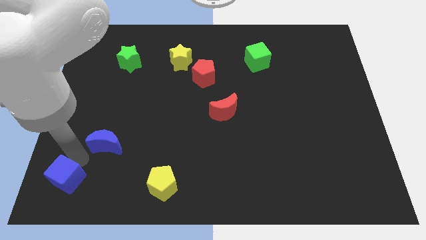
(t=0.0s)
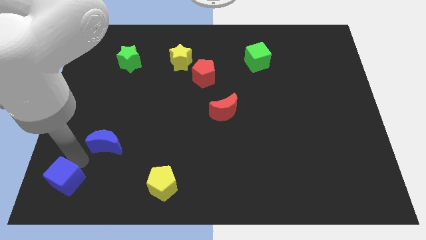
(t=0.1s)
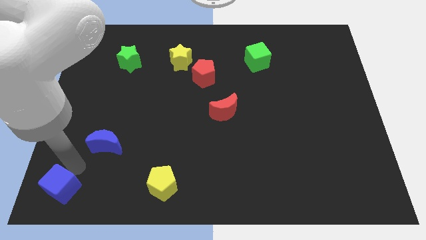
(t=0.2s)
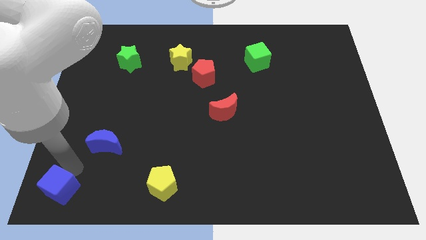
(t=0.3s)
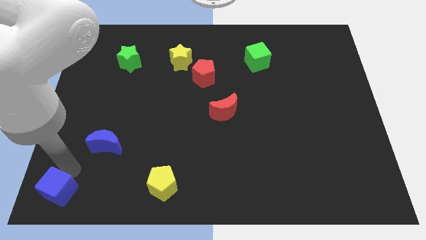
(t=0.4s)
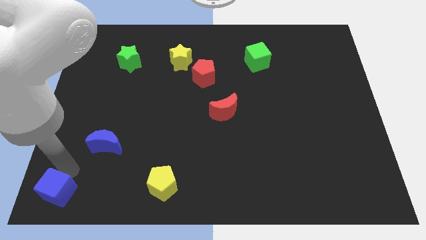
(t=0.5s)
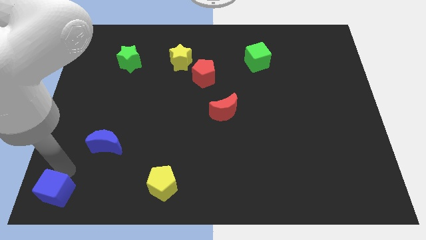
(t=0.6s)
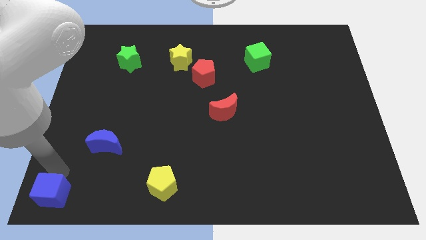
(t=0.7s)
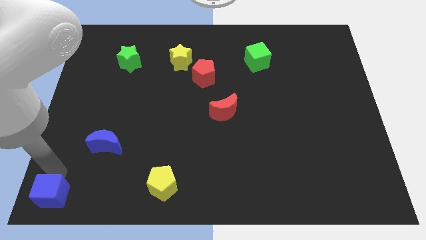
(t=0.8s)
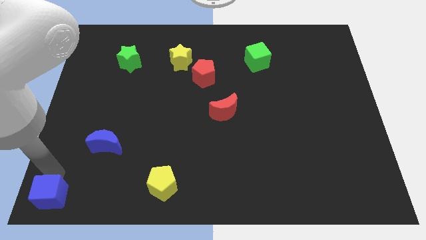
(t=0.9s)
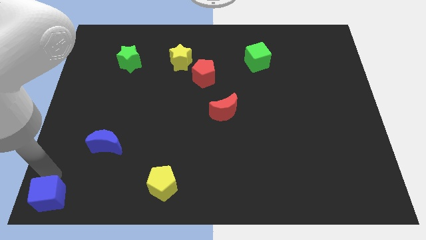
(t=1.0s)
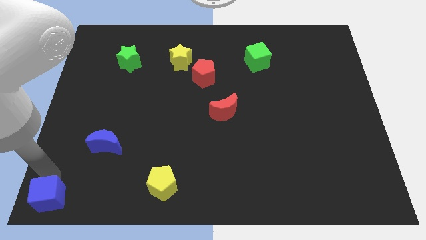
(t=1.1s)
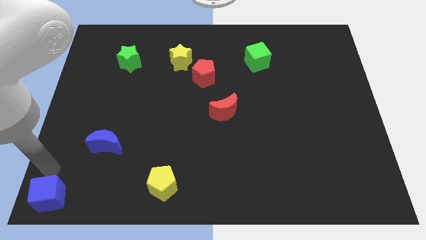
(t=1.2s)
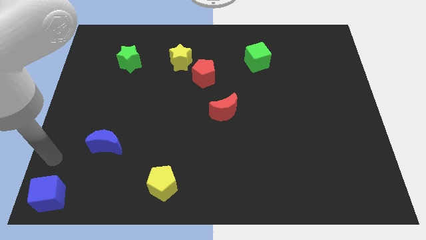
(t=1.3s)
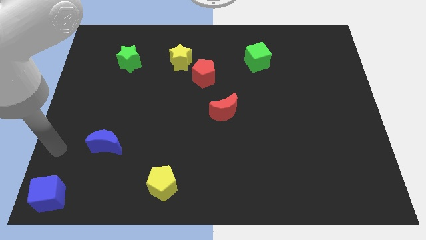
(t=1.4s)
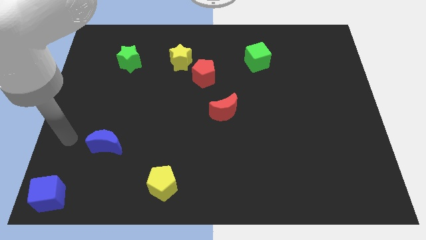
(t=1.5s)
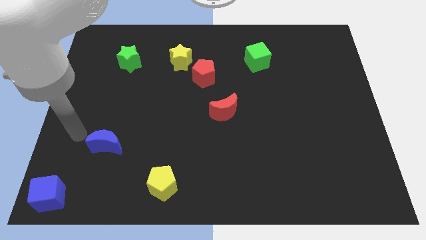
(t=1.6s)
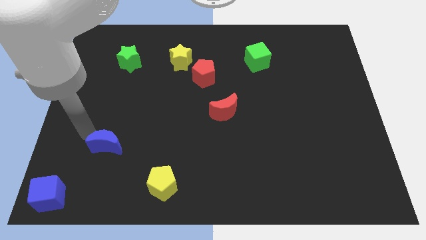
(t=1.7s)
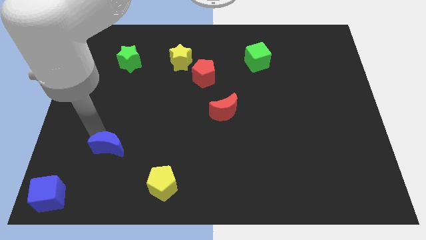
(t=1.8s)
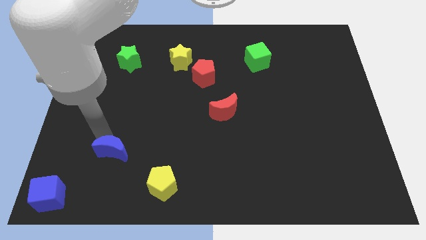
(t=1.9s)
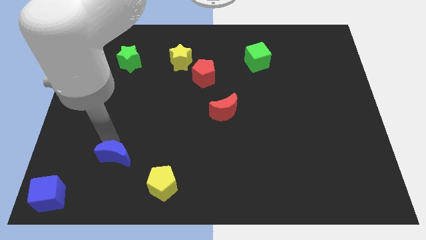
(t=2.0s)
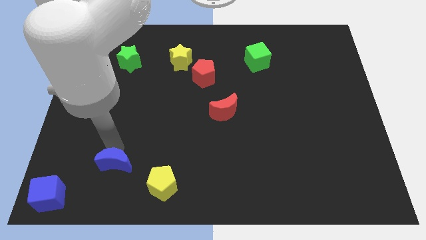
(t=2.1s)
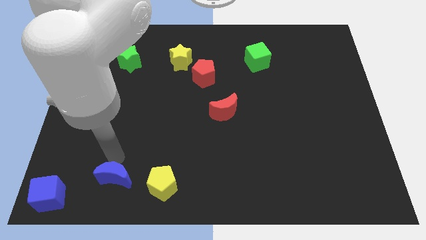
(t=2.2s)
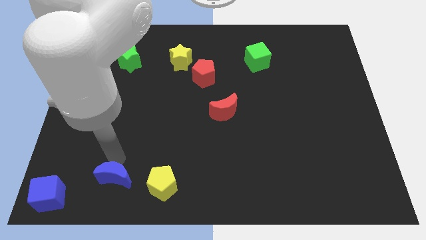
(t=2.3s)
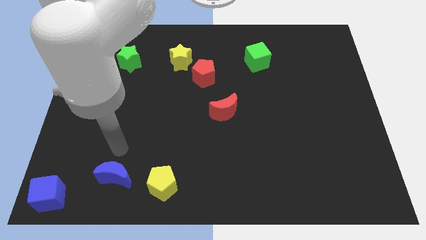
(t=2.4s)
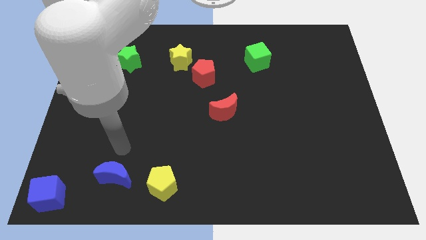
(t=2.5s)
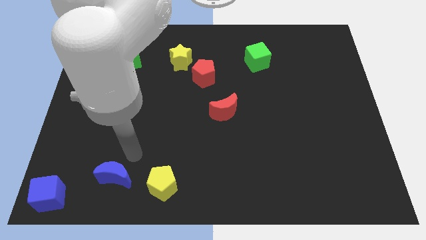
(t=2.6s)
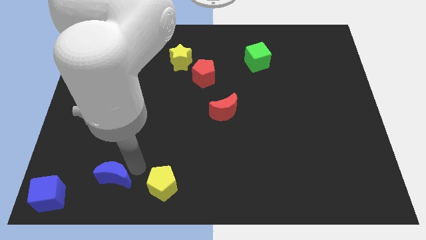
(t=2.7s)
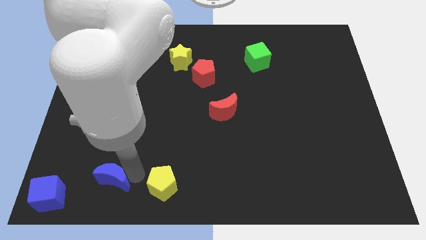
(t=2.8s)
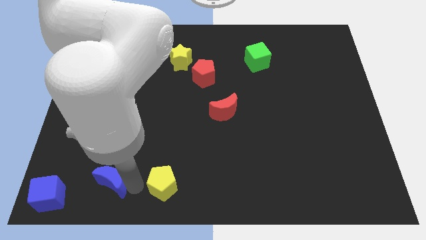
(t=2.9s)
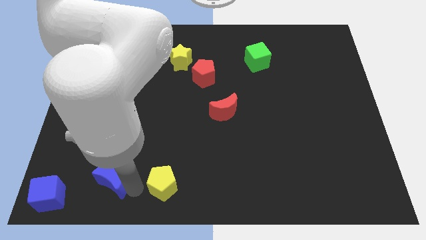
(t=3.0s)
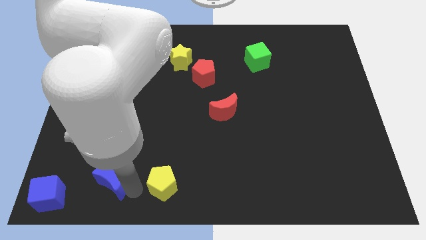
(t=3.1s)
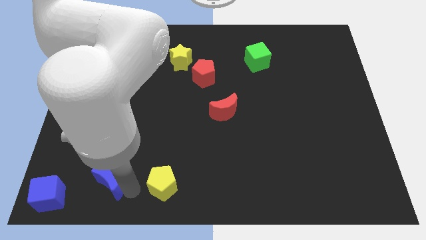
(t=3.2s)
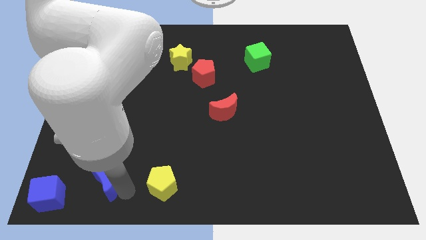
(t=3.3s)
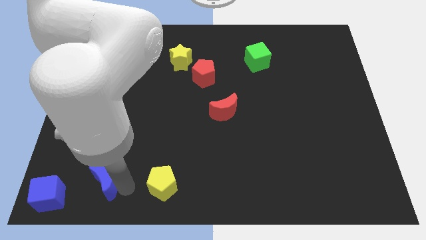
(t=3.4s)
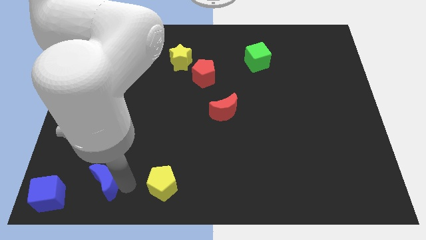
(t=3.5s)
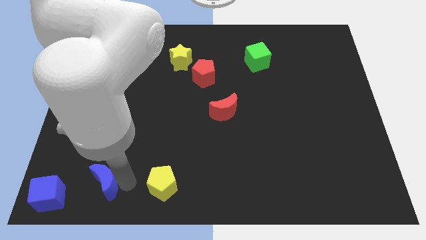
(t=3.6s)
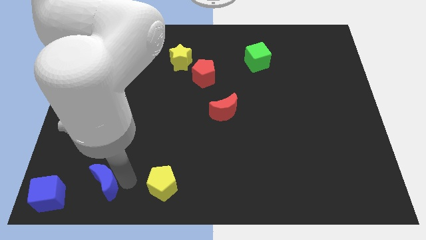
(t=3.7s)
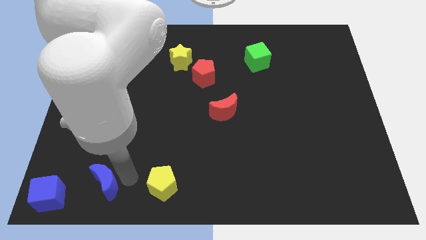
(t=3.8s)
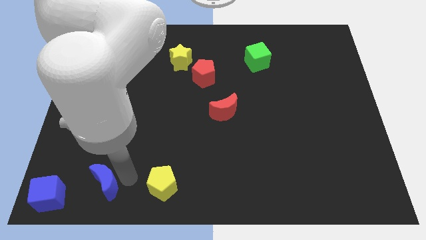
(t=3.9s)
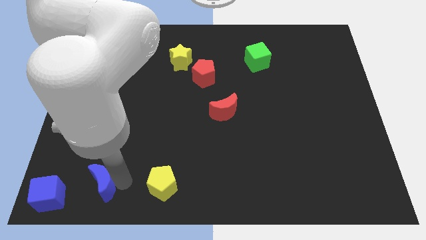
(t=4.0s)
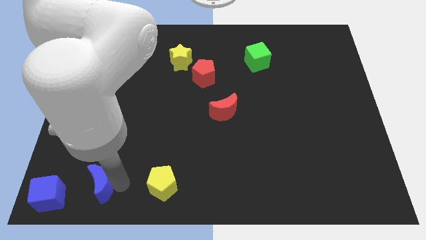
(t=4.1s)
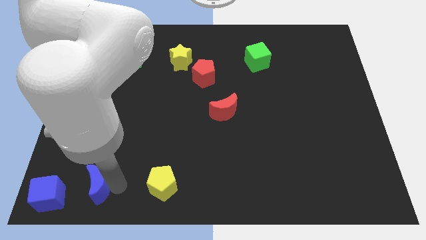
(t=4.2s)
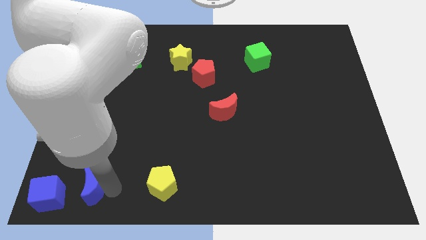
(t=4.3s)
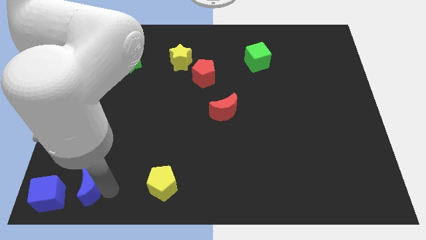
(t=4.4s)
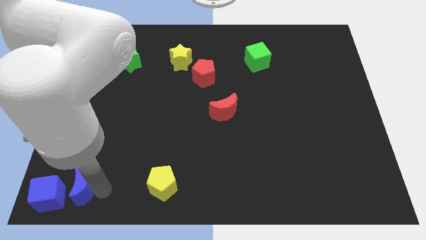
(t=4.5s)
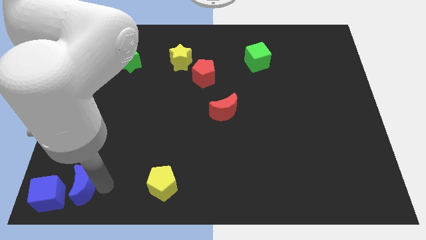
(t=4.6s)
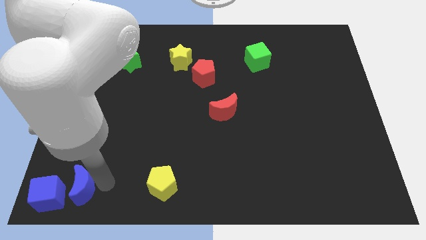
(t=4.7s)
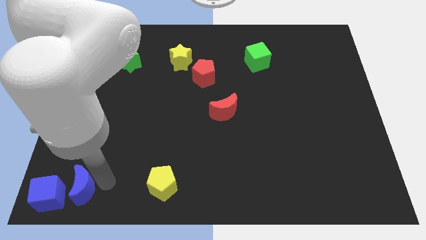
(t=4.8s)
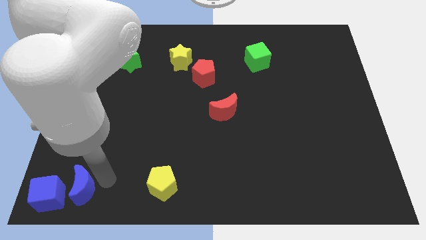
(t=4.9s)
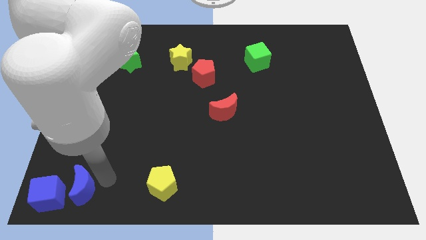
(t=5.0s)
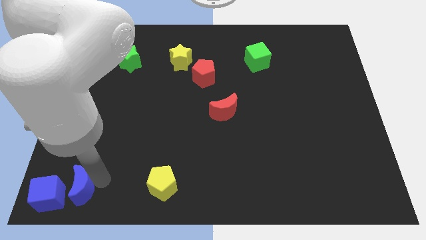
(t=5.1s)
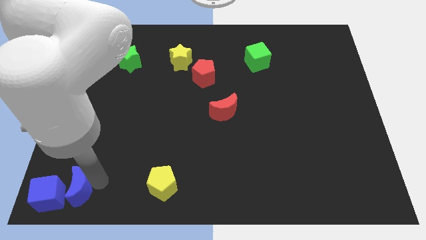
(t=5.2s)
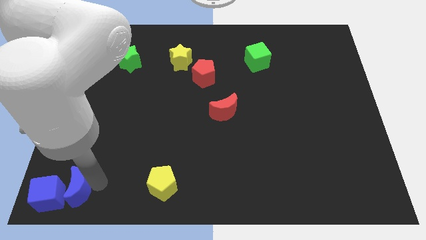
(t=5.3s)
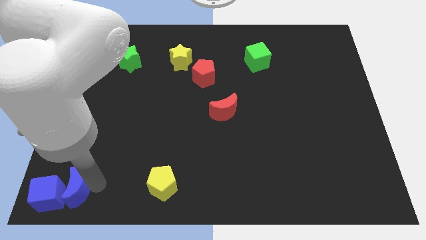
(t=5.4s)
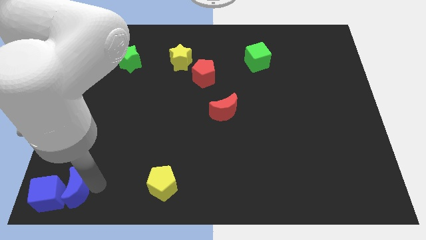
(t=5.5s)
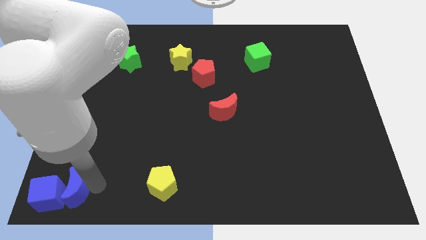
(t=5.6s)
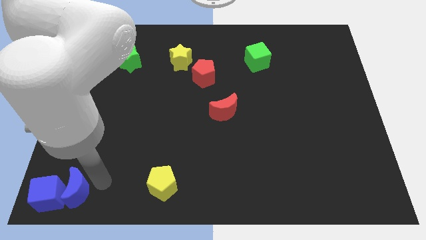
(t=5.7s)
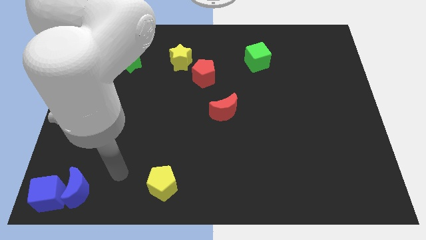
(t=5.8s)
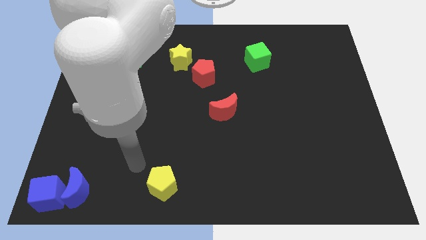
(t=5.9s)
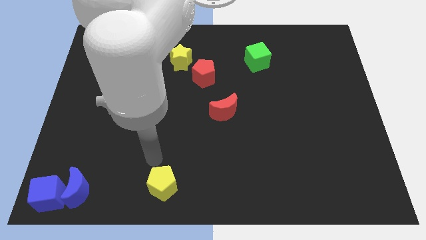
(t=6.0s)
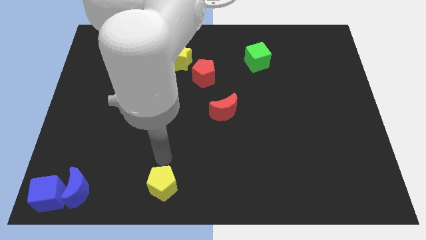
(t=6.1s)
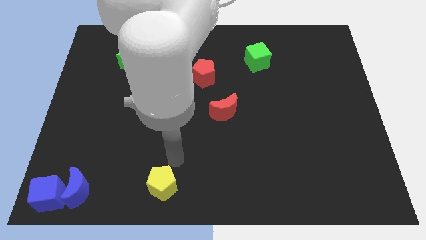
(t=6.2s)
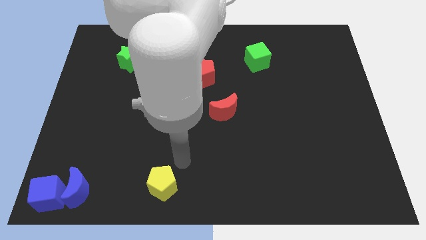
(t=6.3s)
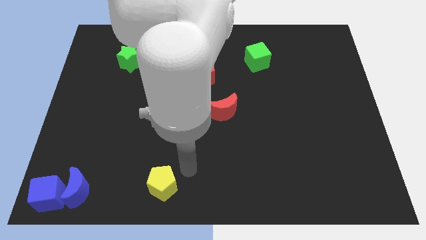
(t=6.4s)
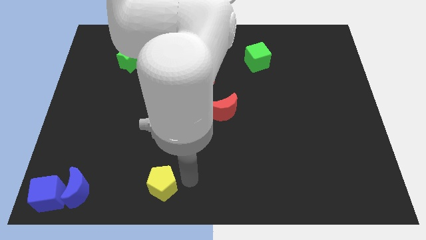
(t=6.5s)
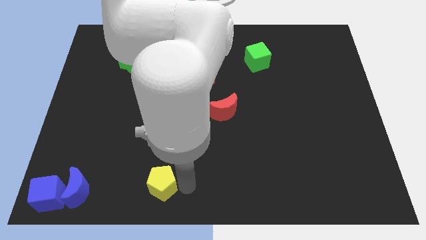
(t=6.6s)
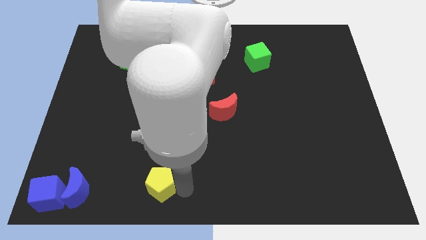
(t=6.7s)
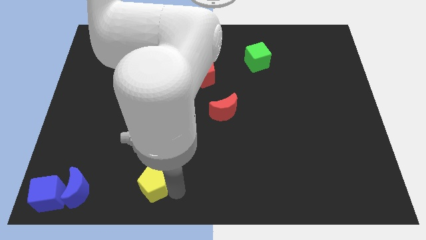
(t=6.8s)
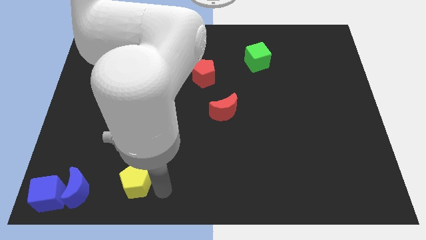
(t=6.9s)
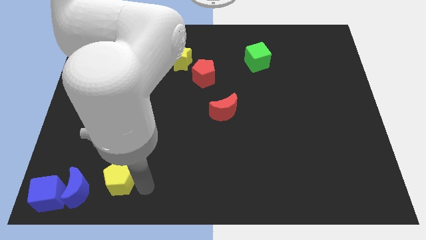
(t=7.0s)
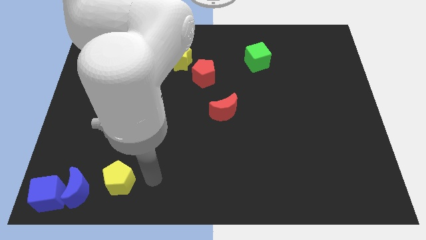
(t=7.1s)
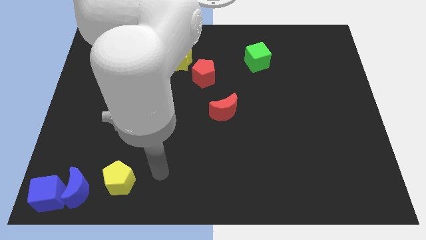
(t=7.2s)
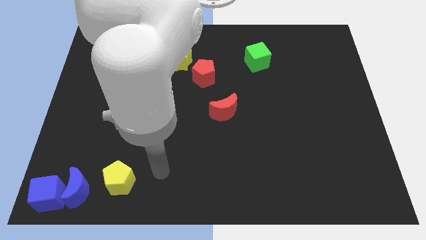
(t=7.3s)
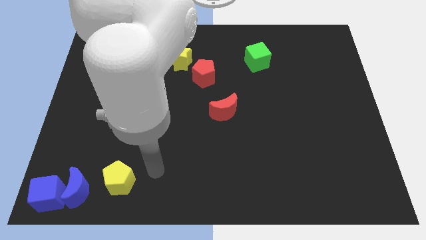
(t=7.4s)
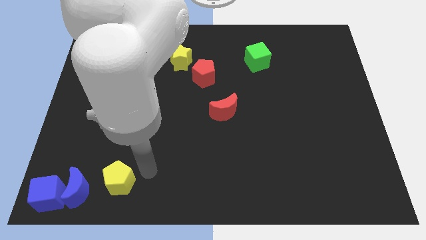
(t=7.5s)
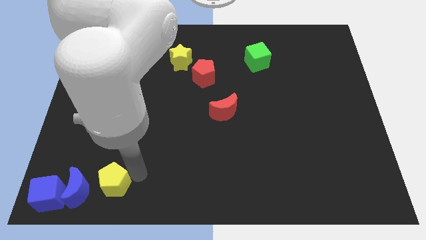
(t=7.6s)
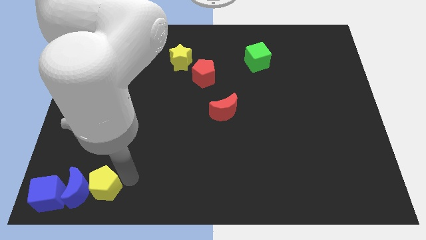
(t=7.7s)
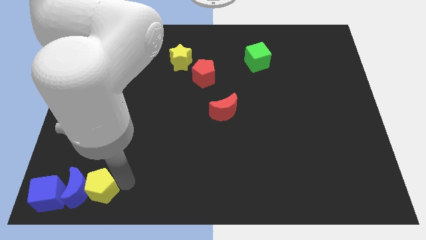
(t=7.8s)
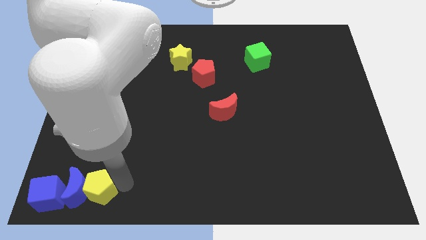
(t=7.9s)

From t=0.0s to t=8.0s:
place the blue blocks and yellow pentagon diagonally at the bottom left of the table

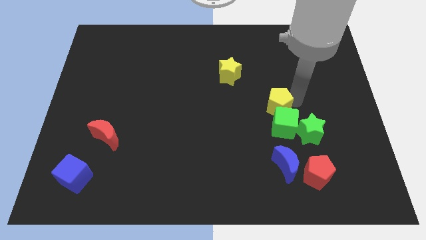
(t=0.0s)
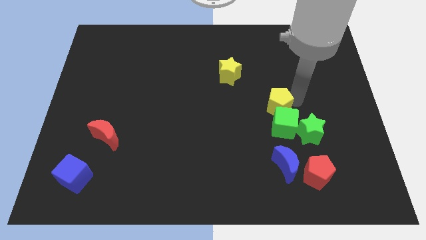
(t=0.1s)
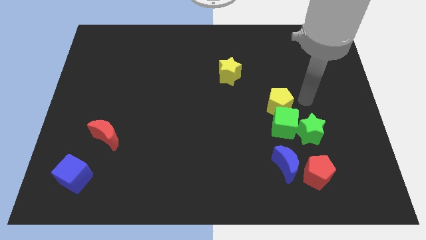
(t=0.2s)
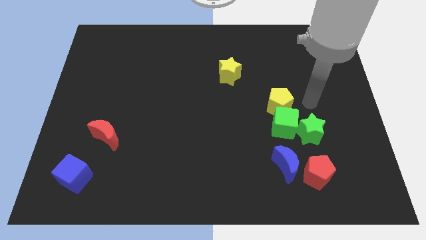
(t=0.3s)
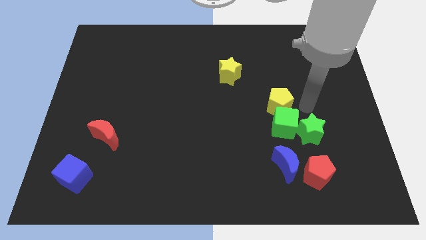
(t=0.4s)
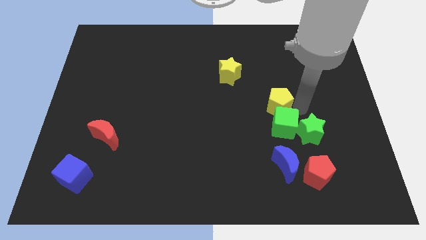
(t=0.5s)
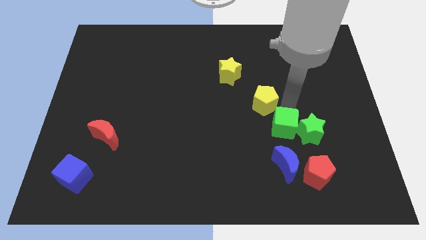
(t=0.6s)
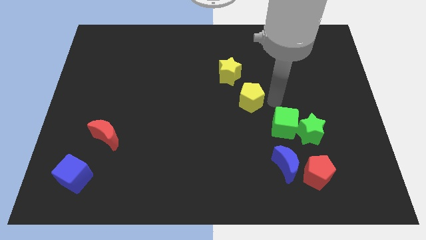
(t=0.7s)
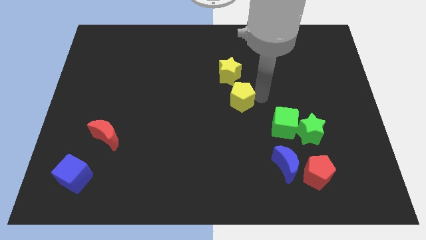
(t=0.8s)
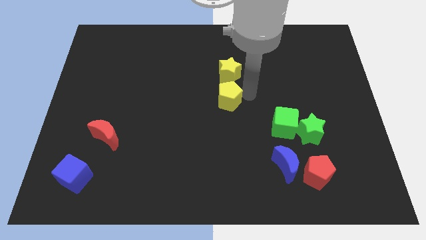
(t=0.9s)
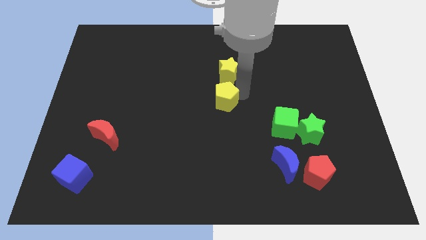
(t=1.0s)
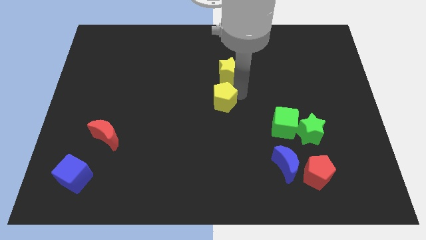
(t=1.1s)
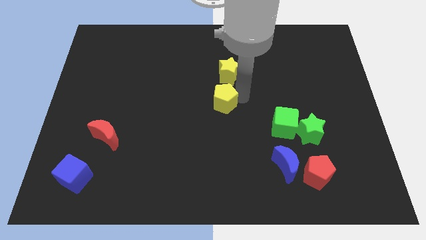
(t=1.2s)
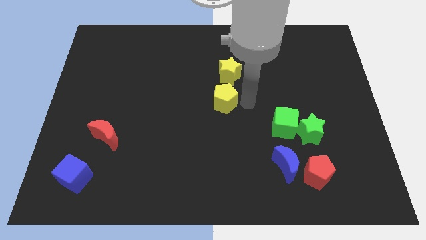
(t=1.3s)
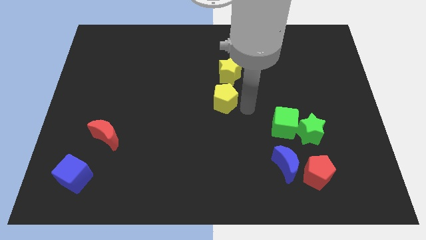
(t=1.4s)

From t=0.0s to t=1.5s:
place the yellow pentagon below the yellow star
